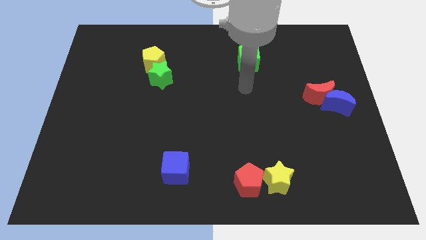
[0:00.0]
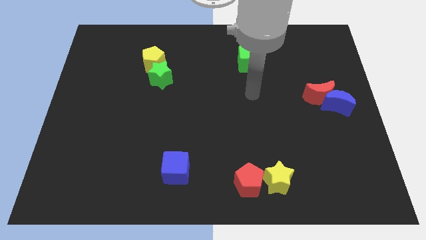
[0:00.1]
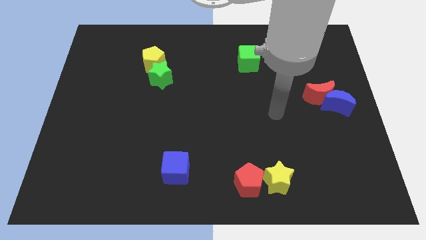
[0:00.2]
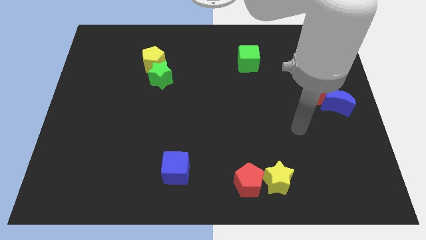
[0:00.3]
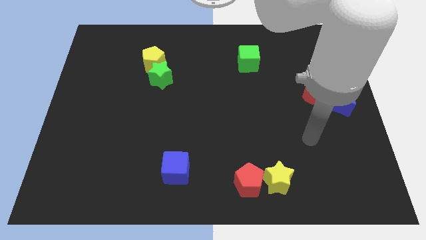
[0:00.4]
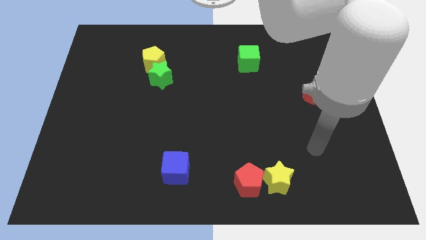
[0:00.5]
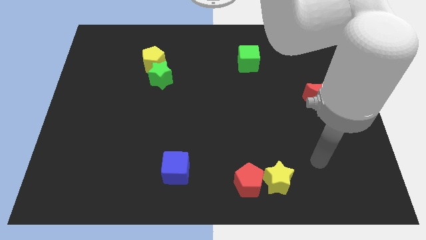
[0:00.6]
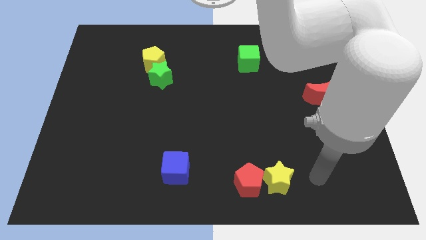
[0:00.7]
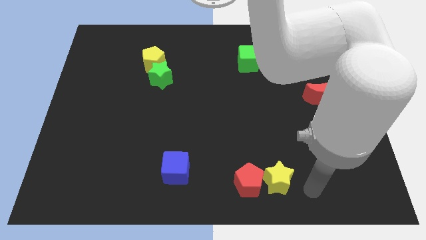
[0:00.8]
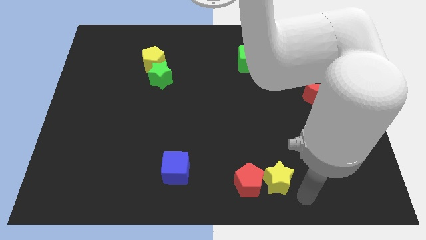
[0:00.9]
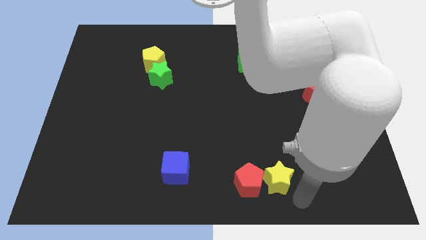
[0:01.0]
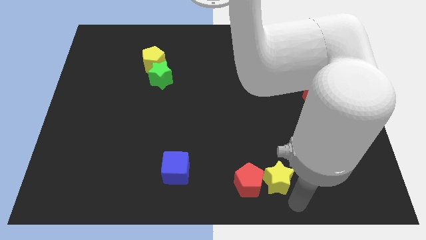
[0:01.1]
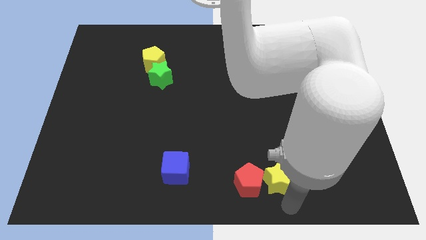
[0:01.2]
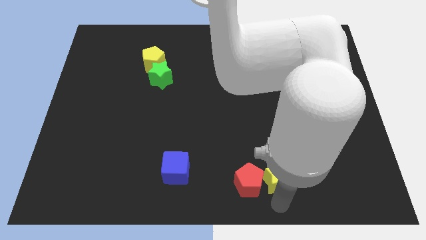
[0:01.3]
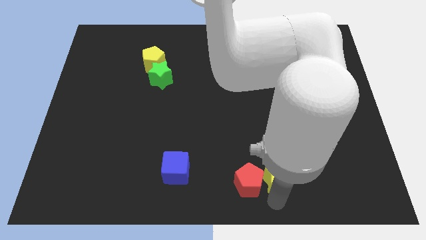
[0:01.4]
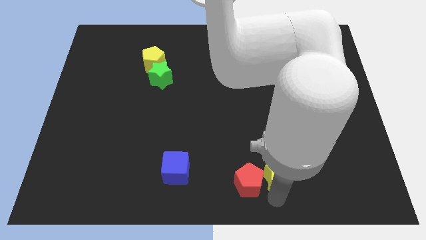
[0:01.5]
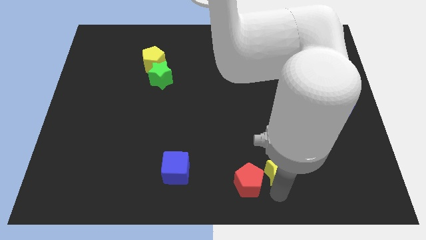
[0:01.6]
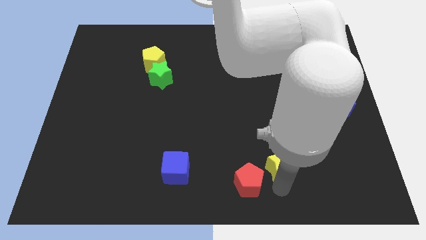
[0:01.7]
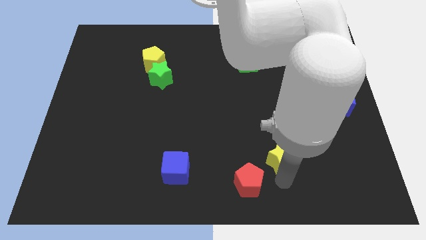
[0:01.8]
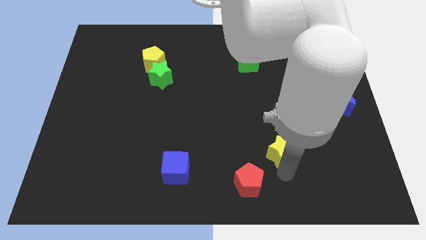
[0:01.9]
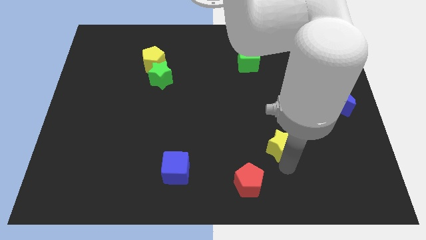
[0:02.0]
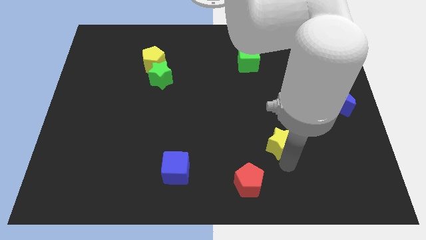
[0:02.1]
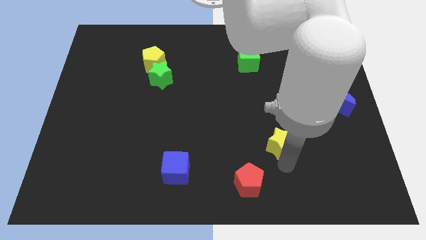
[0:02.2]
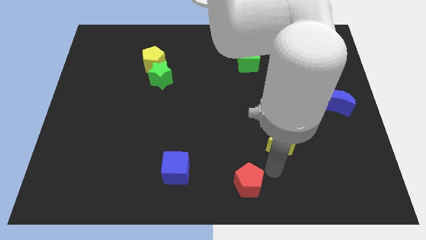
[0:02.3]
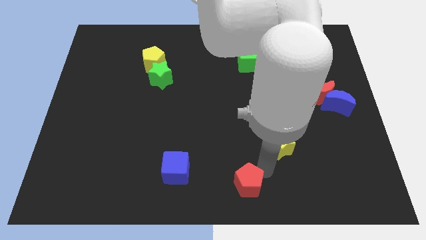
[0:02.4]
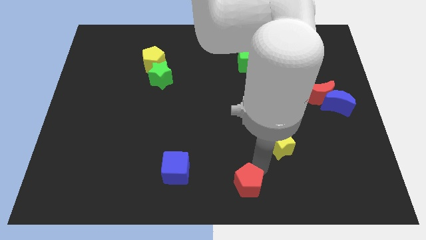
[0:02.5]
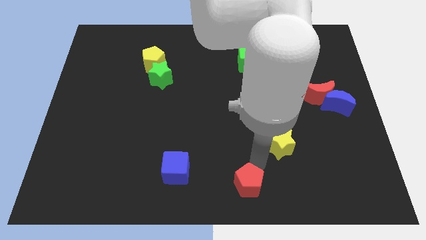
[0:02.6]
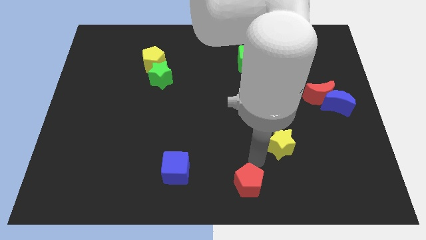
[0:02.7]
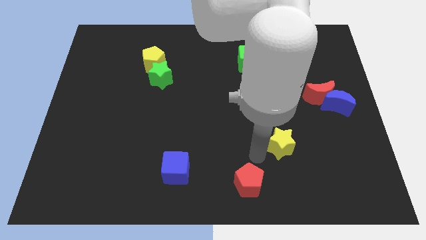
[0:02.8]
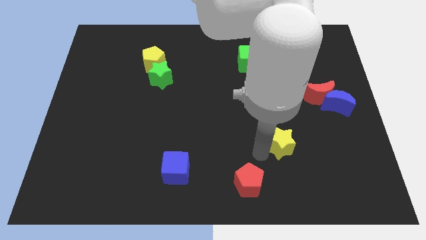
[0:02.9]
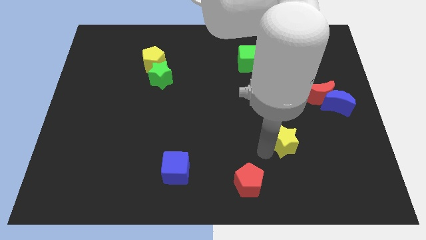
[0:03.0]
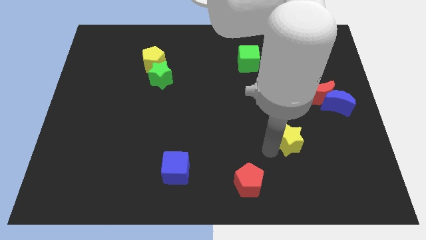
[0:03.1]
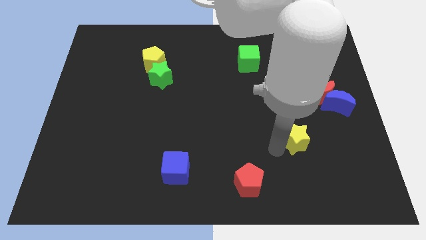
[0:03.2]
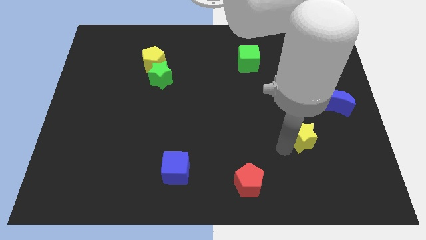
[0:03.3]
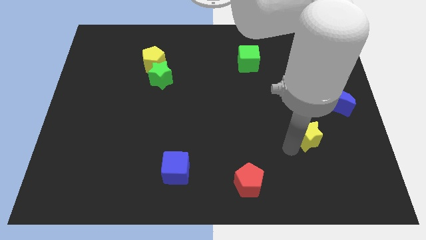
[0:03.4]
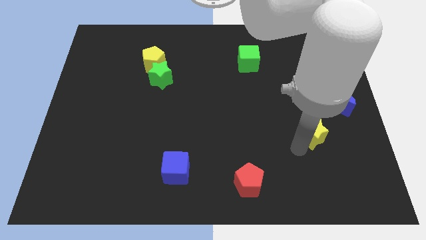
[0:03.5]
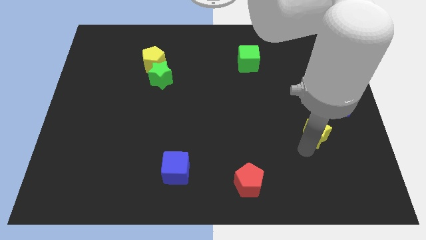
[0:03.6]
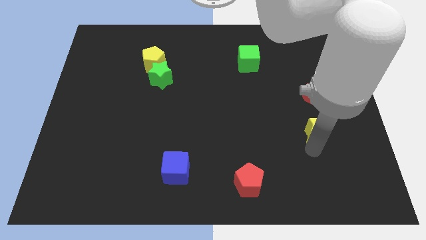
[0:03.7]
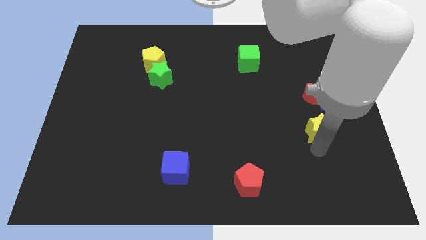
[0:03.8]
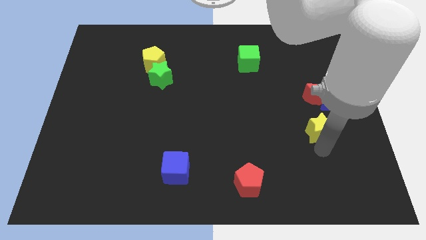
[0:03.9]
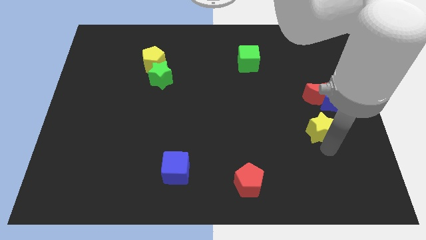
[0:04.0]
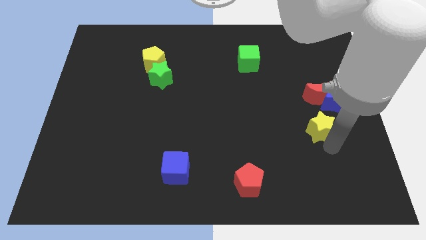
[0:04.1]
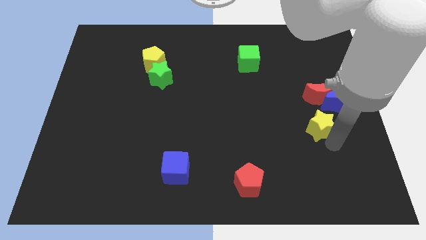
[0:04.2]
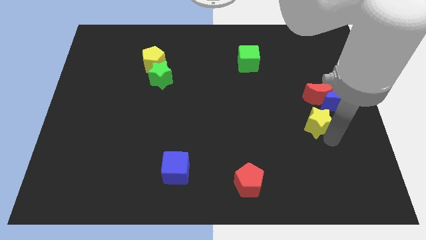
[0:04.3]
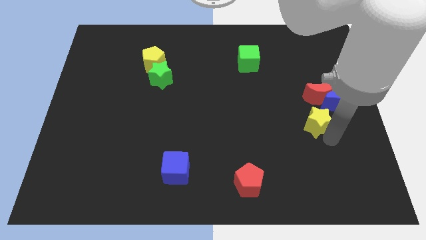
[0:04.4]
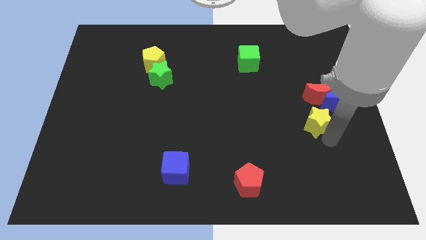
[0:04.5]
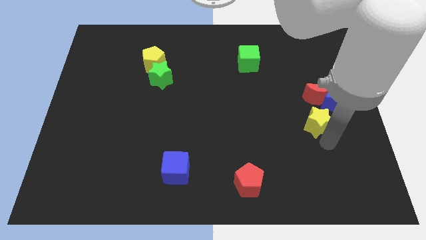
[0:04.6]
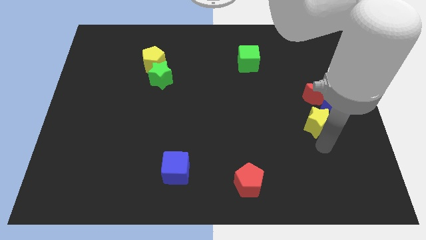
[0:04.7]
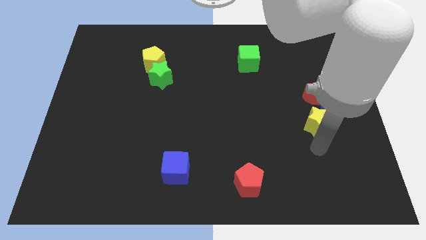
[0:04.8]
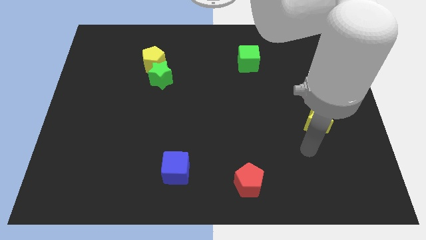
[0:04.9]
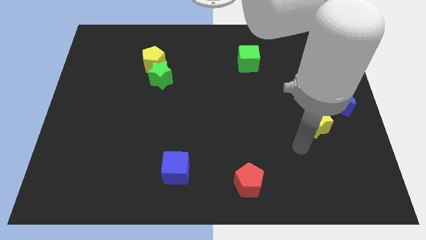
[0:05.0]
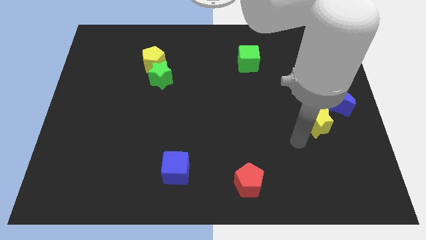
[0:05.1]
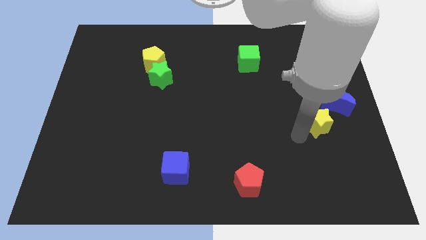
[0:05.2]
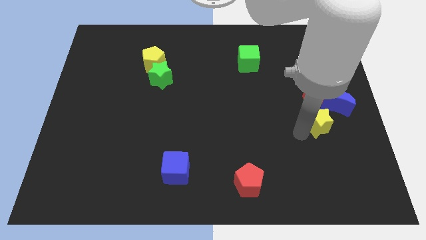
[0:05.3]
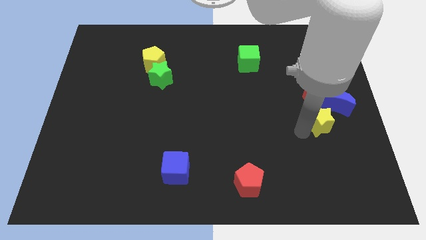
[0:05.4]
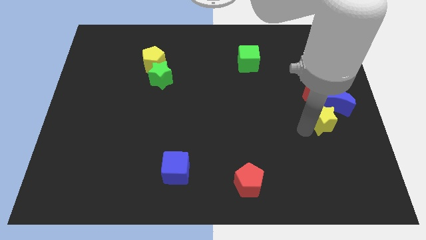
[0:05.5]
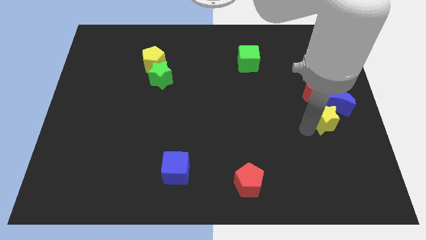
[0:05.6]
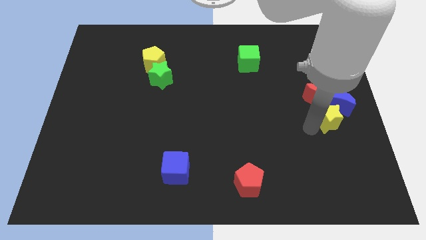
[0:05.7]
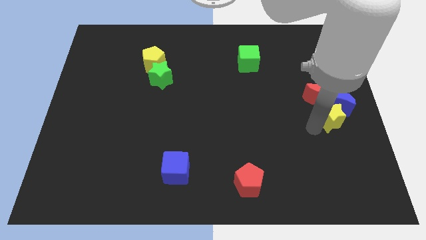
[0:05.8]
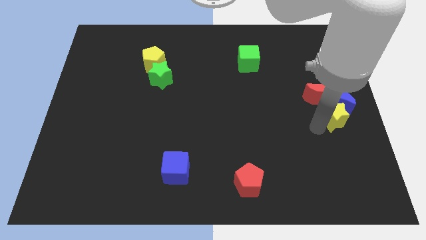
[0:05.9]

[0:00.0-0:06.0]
move the yellow star next to the blue moon

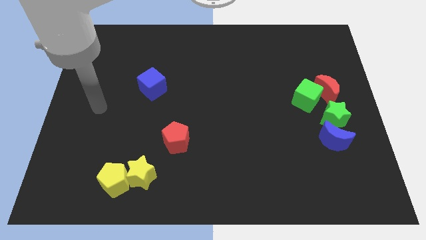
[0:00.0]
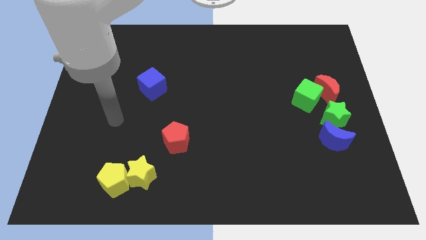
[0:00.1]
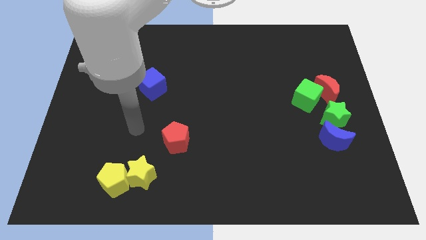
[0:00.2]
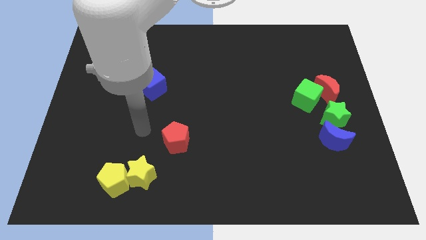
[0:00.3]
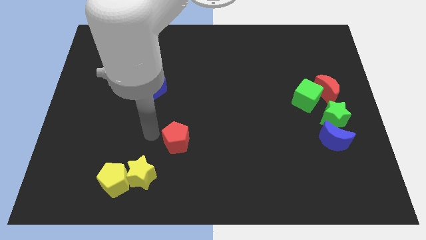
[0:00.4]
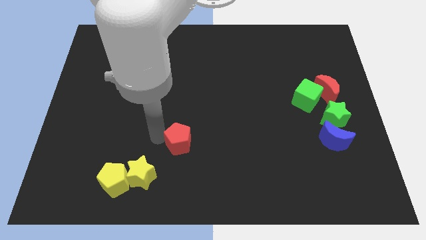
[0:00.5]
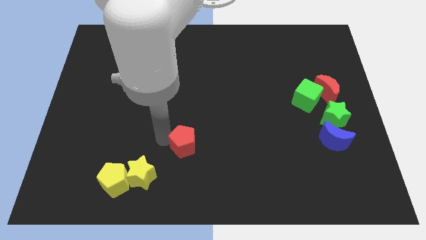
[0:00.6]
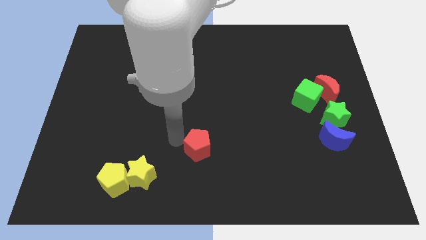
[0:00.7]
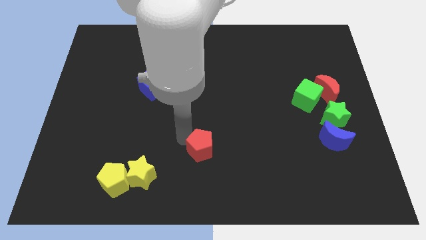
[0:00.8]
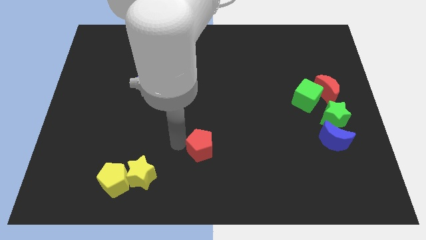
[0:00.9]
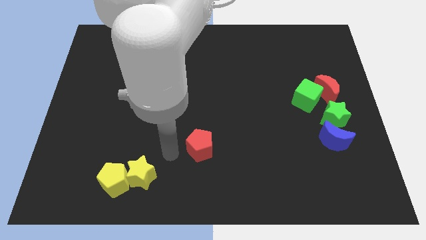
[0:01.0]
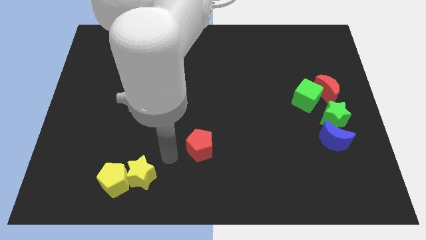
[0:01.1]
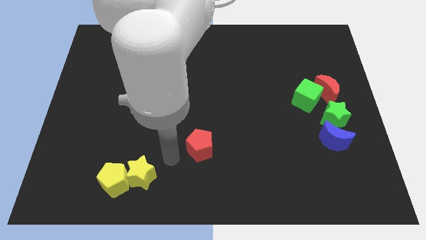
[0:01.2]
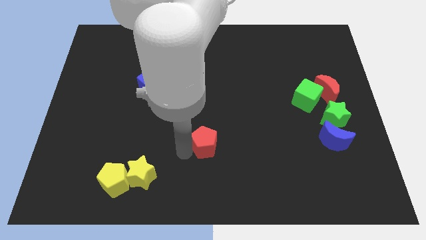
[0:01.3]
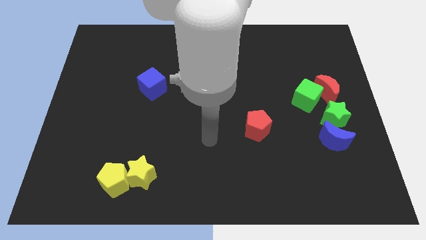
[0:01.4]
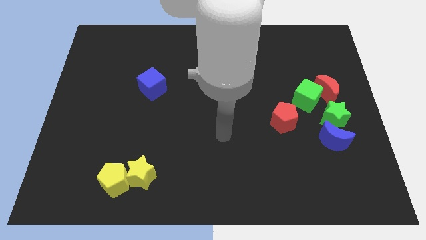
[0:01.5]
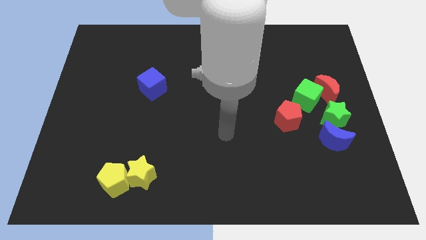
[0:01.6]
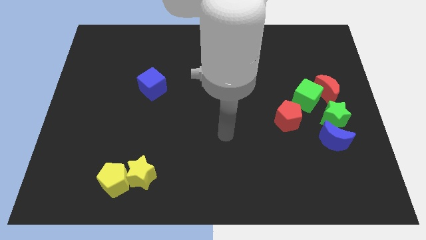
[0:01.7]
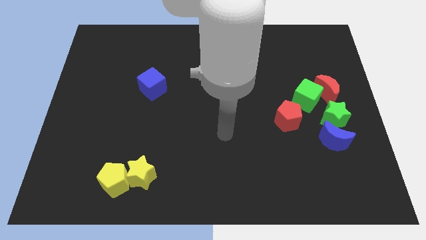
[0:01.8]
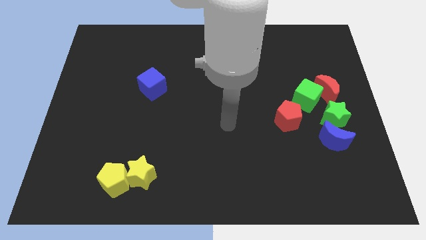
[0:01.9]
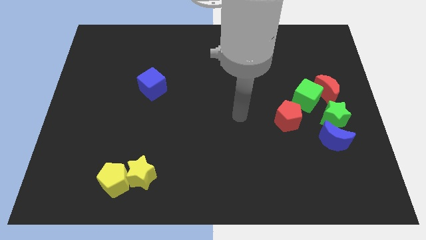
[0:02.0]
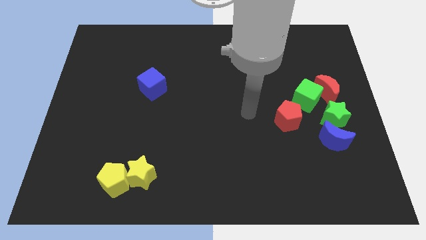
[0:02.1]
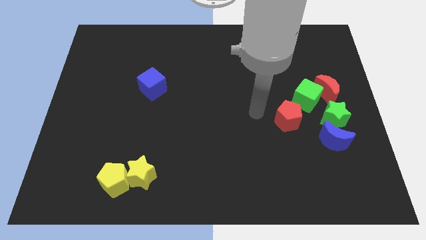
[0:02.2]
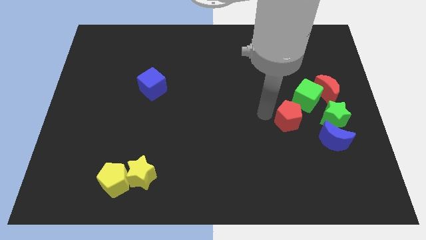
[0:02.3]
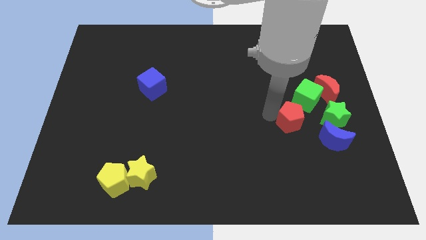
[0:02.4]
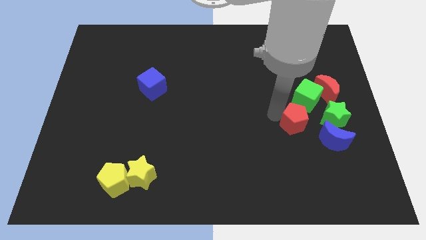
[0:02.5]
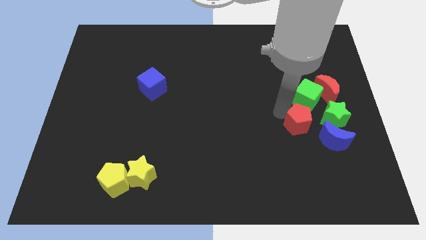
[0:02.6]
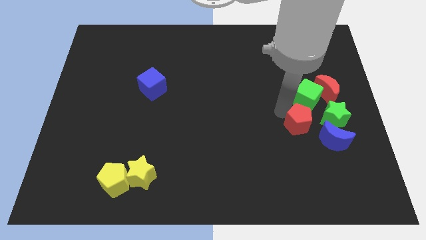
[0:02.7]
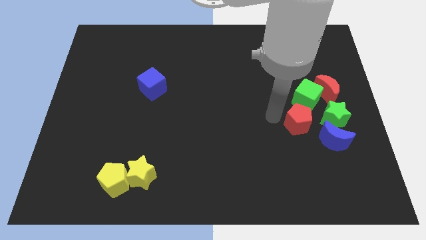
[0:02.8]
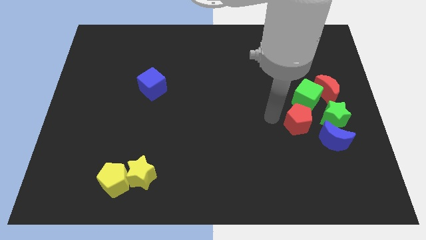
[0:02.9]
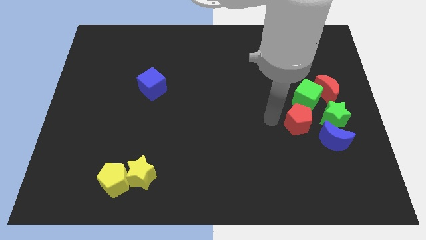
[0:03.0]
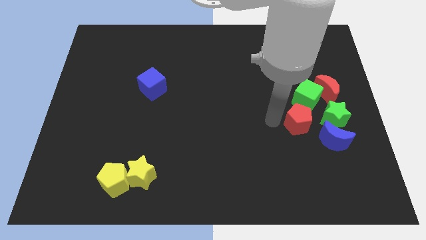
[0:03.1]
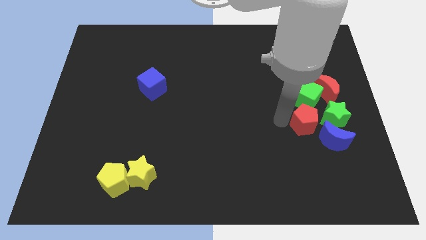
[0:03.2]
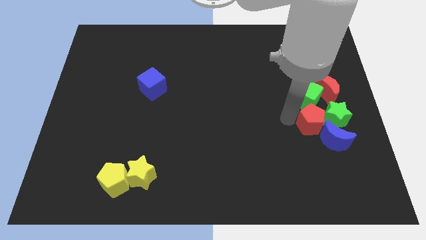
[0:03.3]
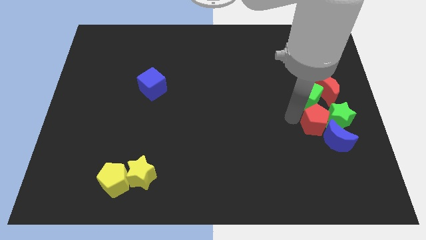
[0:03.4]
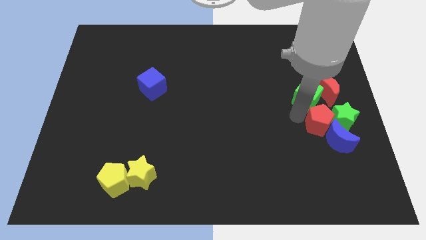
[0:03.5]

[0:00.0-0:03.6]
slide the red pentagon next to the green star
